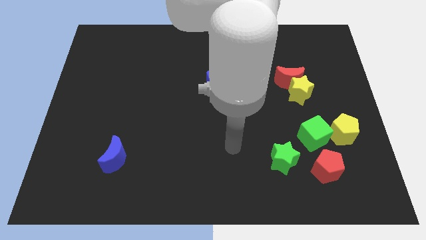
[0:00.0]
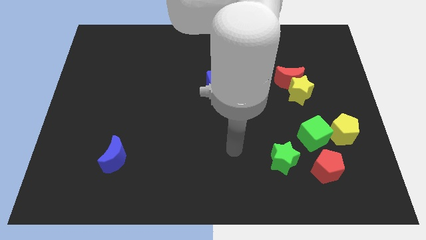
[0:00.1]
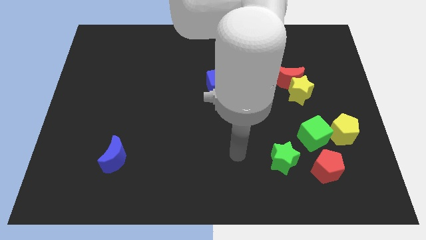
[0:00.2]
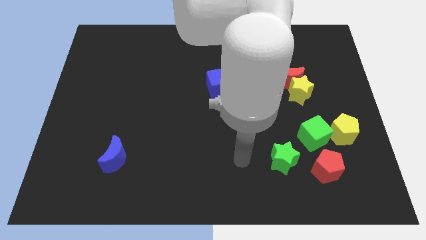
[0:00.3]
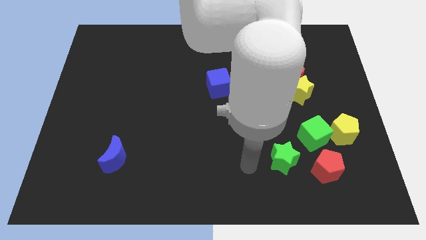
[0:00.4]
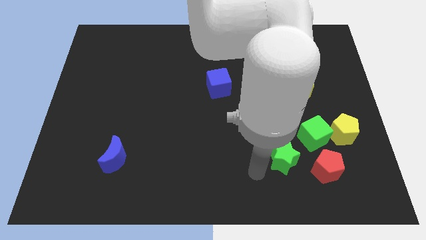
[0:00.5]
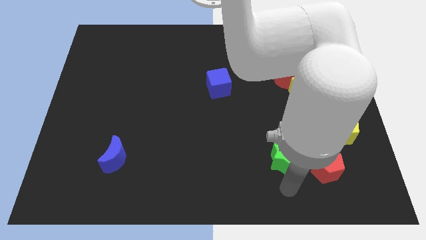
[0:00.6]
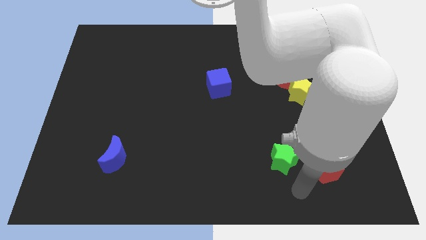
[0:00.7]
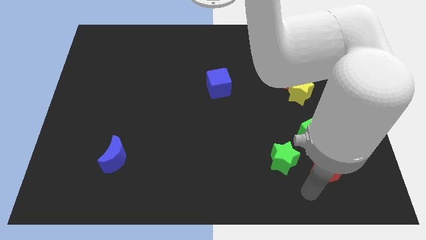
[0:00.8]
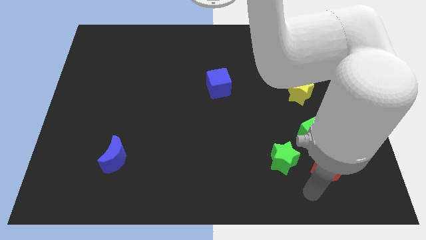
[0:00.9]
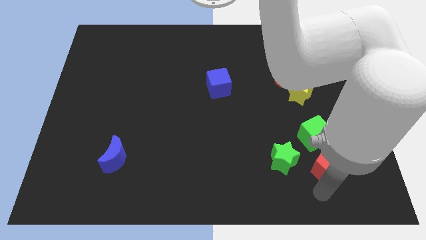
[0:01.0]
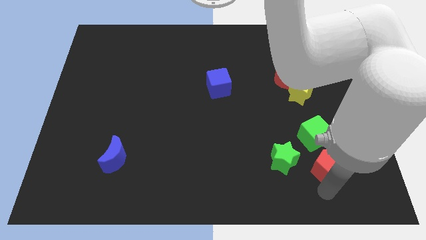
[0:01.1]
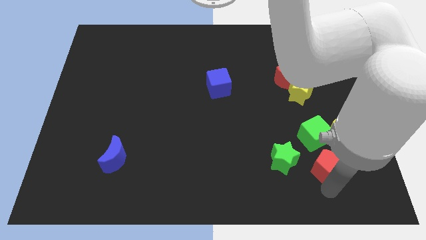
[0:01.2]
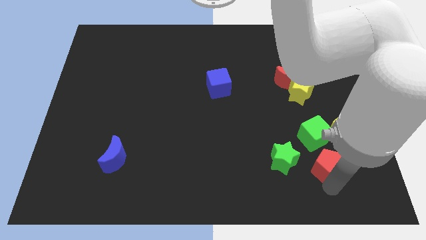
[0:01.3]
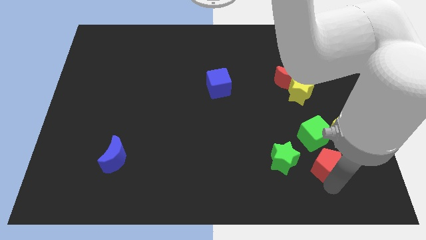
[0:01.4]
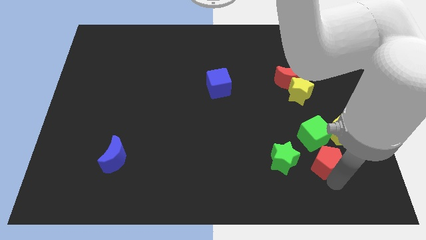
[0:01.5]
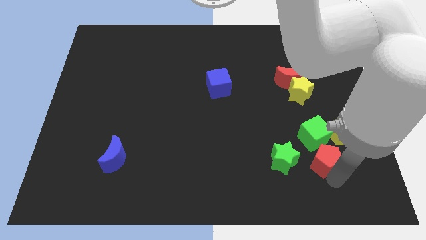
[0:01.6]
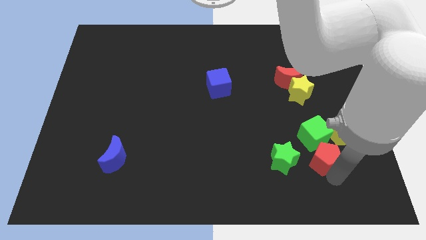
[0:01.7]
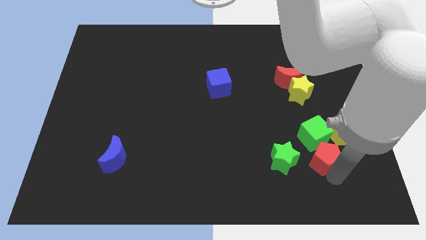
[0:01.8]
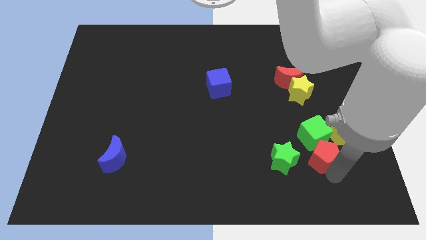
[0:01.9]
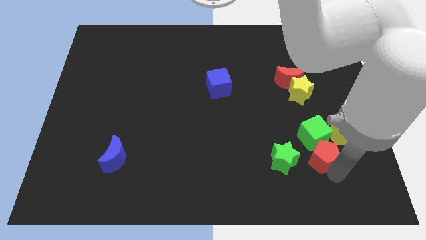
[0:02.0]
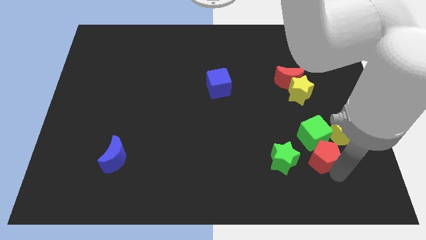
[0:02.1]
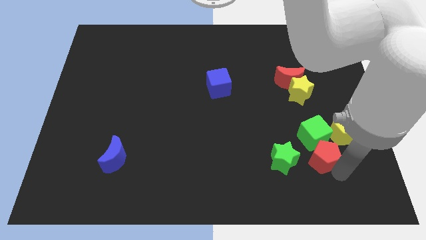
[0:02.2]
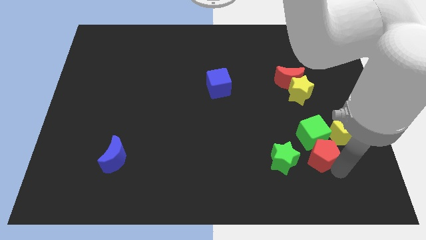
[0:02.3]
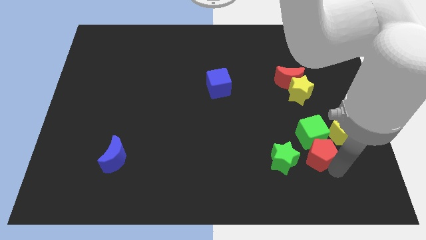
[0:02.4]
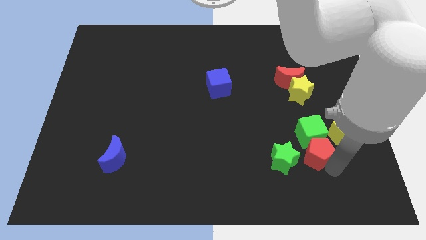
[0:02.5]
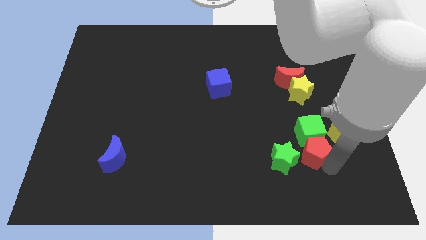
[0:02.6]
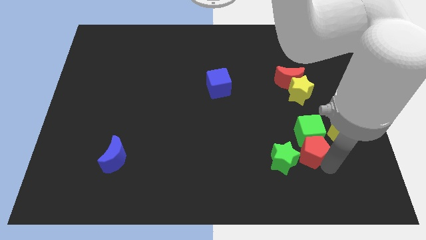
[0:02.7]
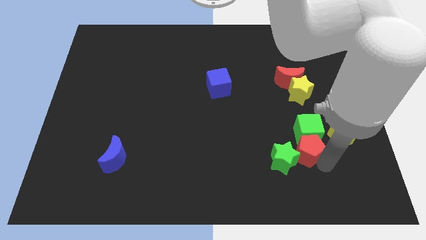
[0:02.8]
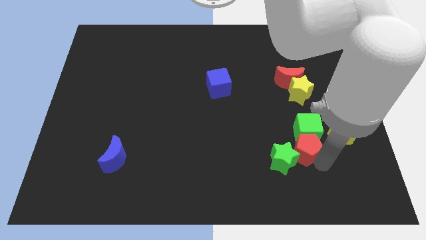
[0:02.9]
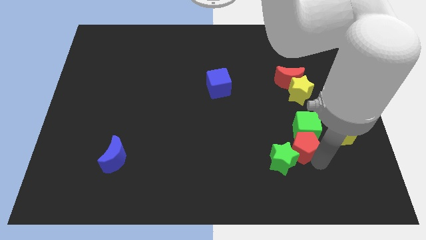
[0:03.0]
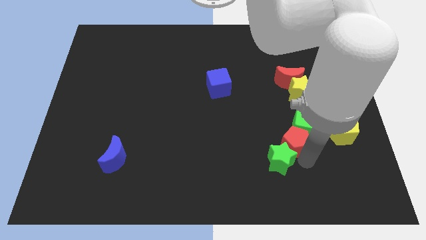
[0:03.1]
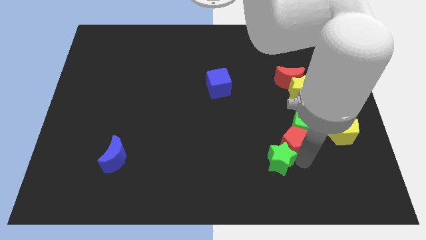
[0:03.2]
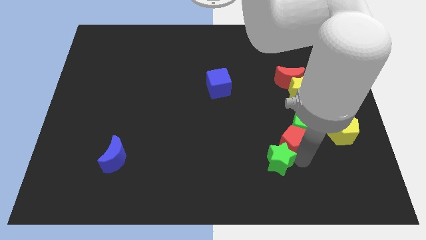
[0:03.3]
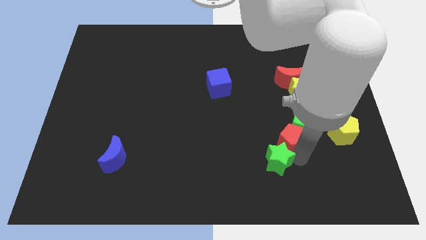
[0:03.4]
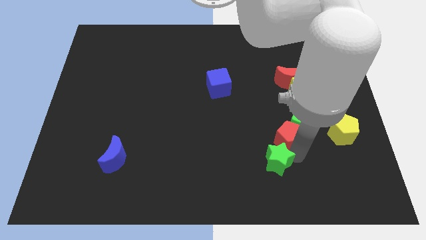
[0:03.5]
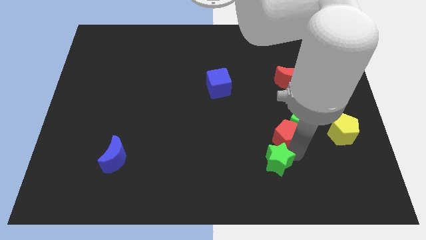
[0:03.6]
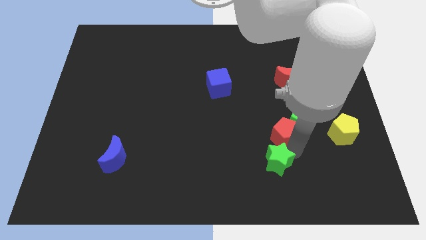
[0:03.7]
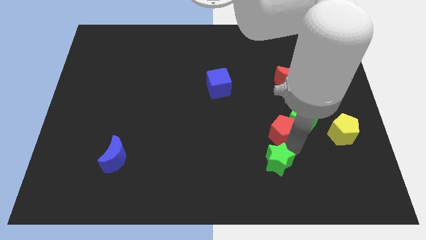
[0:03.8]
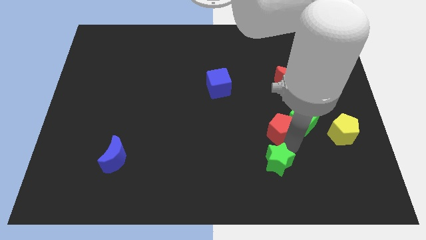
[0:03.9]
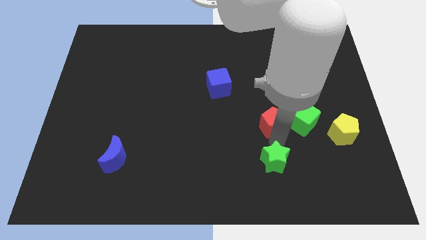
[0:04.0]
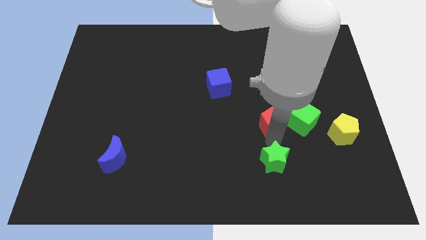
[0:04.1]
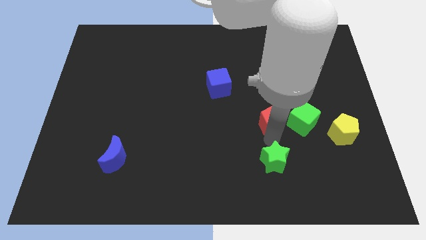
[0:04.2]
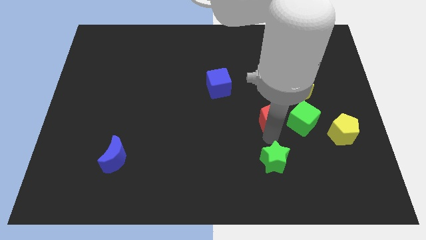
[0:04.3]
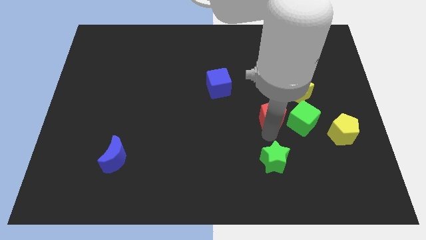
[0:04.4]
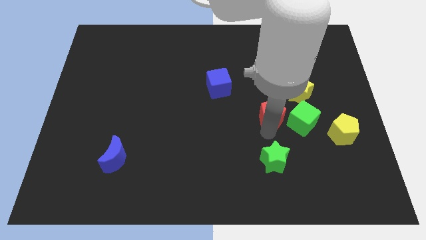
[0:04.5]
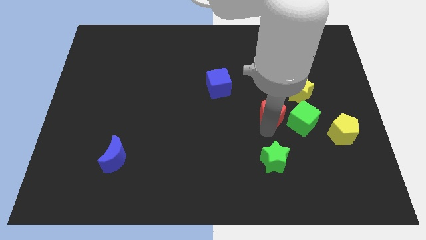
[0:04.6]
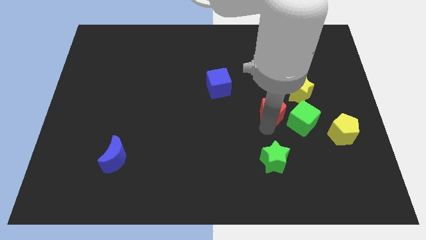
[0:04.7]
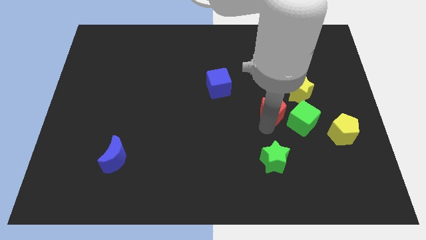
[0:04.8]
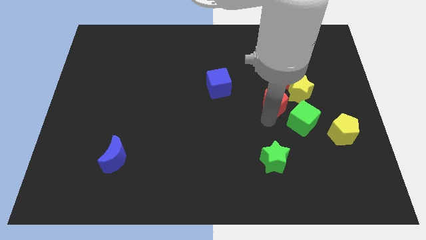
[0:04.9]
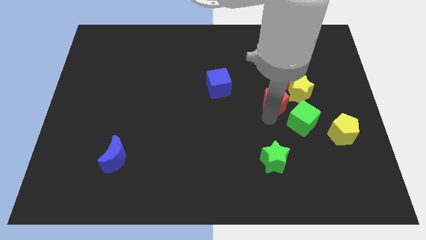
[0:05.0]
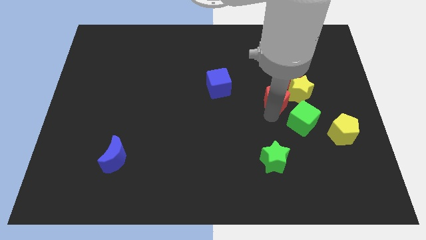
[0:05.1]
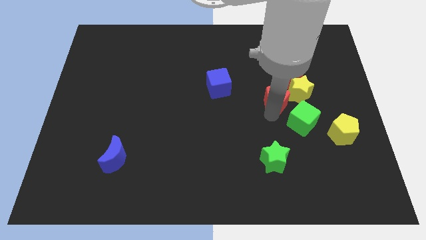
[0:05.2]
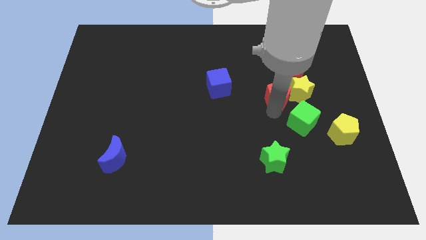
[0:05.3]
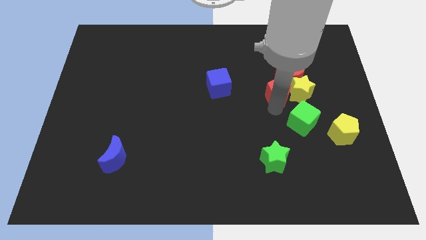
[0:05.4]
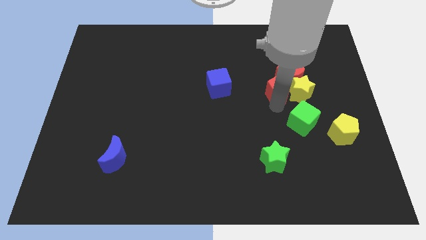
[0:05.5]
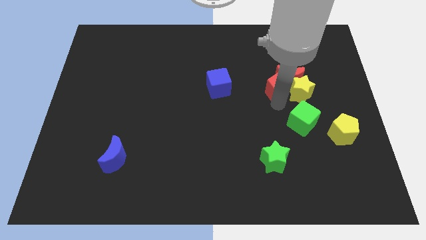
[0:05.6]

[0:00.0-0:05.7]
push the red pentagon towards the red moon

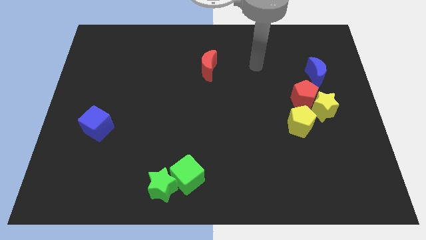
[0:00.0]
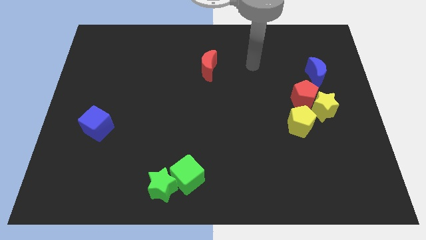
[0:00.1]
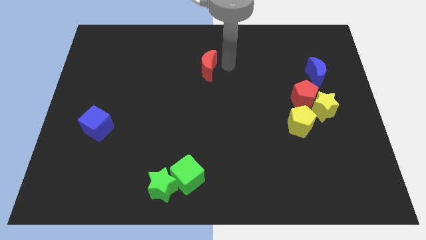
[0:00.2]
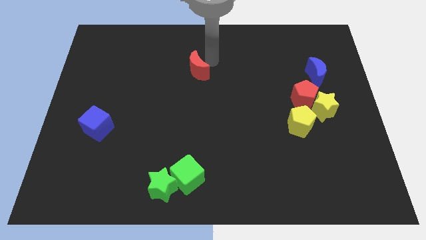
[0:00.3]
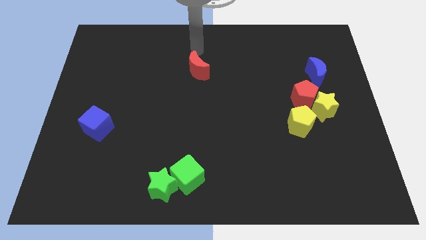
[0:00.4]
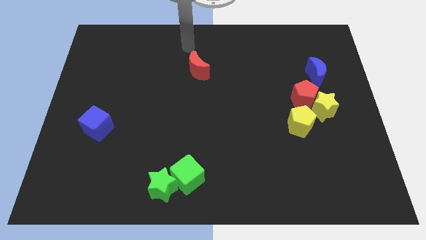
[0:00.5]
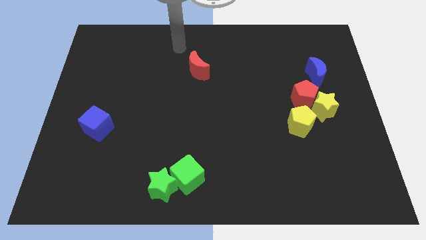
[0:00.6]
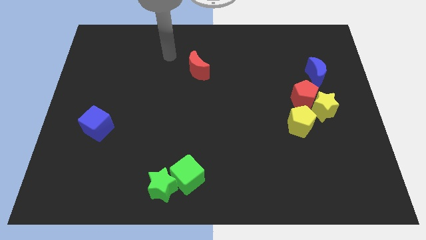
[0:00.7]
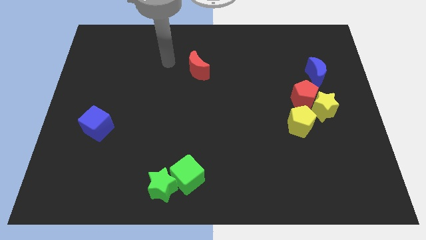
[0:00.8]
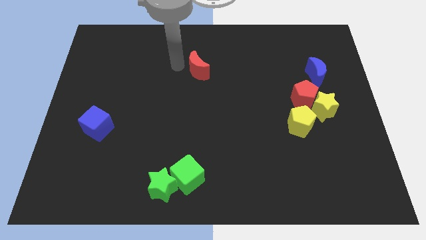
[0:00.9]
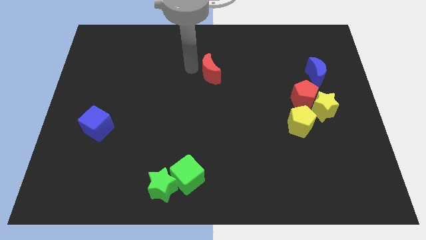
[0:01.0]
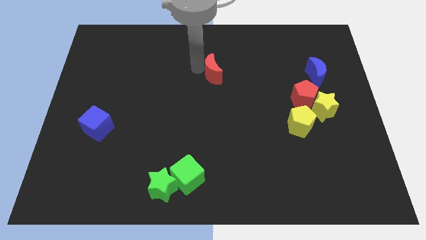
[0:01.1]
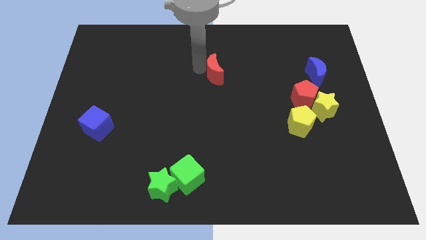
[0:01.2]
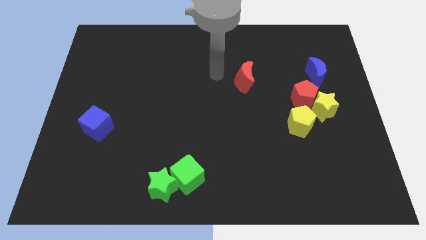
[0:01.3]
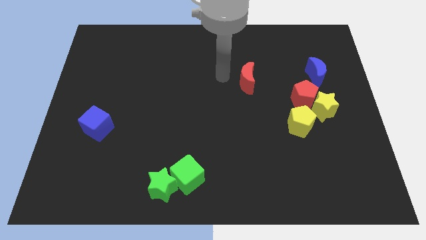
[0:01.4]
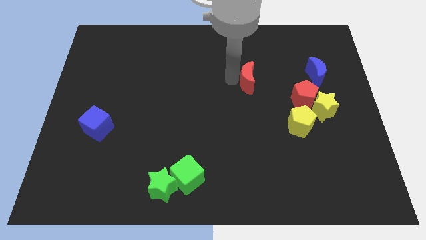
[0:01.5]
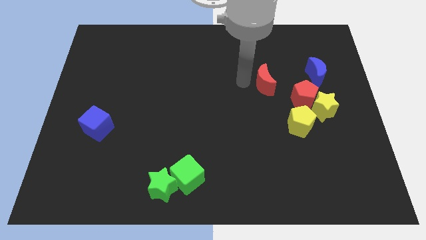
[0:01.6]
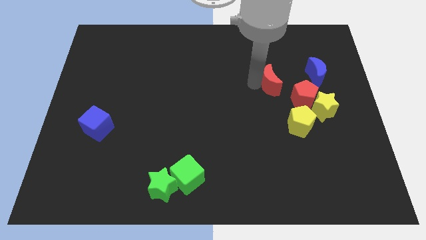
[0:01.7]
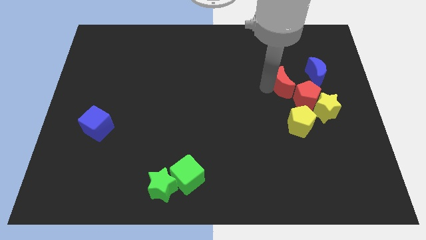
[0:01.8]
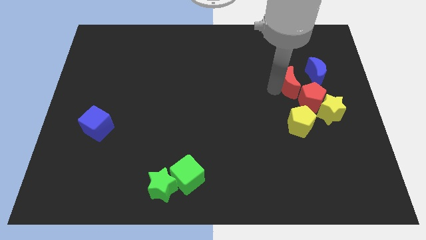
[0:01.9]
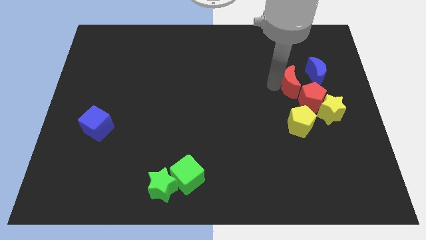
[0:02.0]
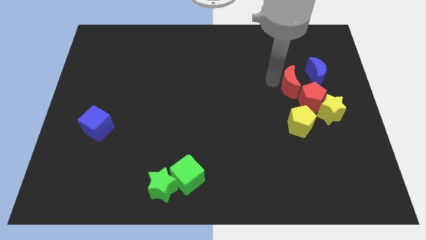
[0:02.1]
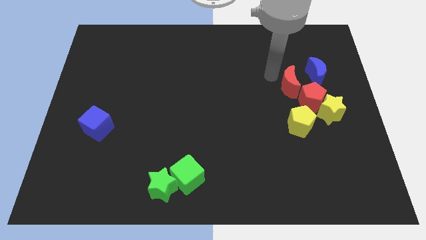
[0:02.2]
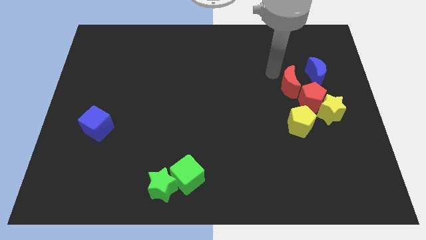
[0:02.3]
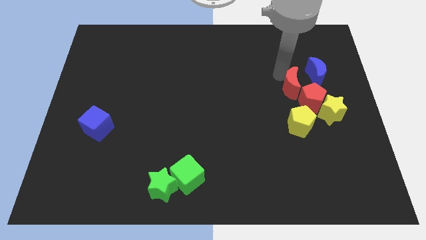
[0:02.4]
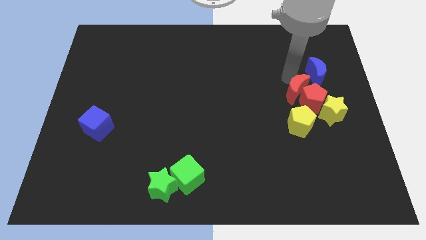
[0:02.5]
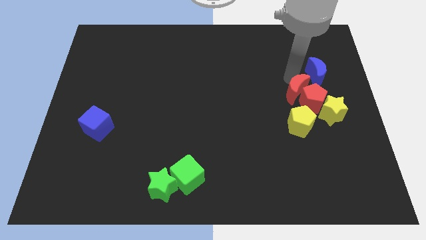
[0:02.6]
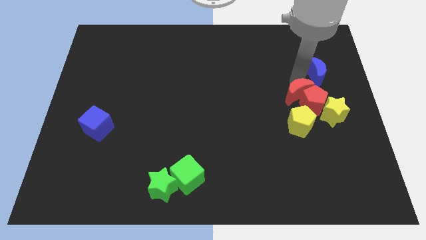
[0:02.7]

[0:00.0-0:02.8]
put the red moon towards the red pentagon
